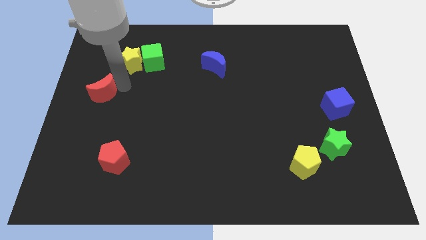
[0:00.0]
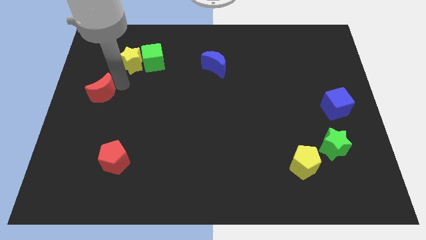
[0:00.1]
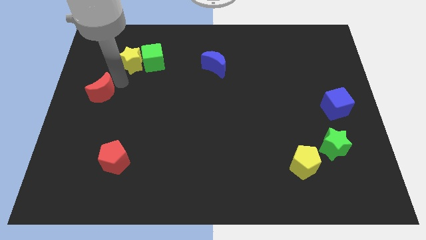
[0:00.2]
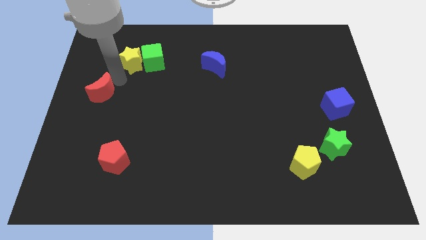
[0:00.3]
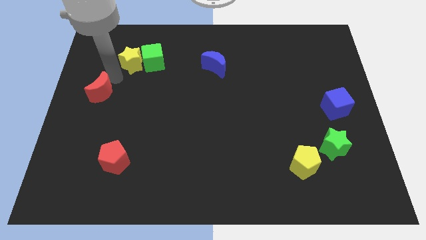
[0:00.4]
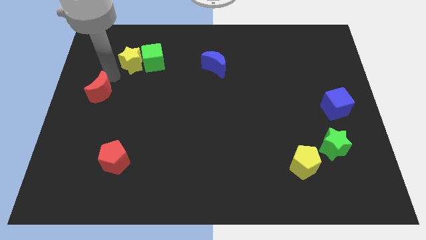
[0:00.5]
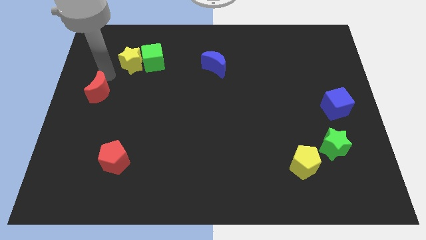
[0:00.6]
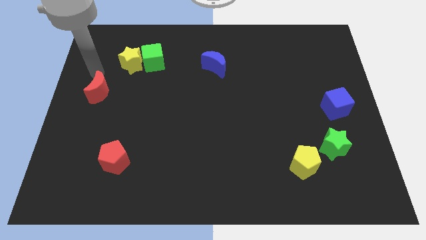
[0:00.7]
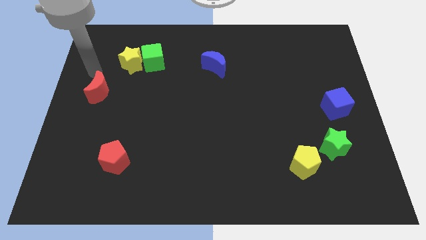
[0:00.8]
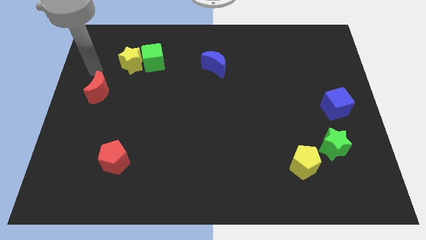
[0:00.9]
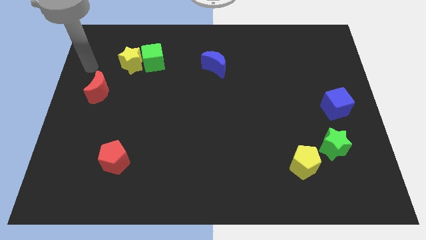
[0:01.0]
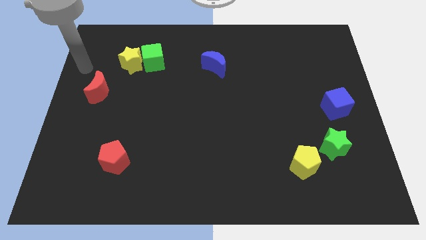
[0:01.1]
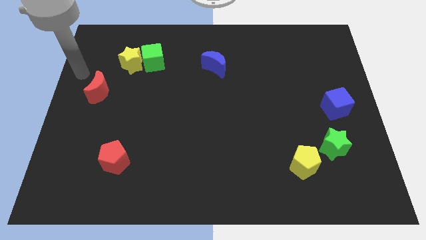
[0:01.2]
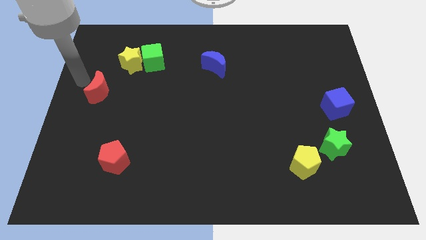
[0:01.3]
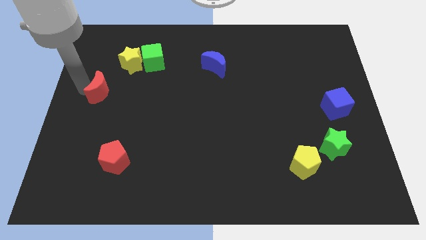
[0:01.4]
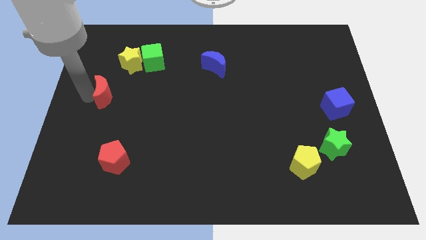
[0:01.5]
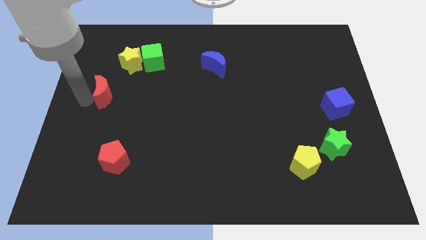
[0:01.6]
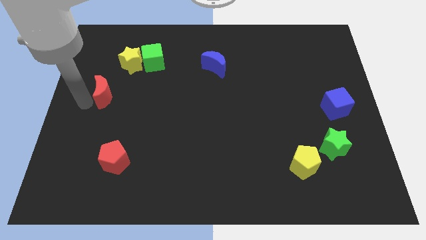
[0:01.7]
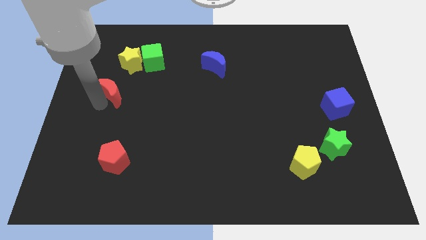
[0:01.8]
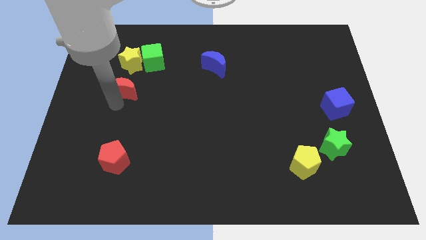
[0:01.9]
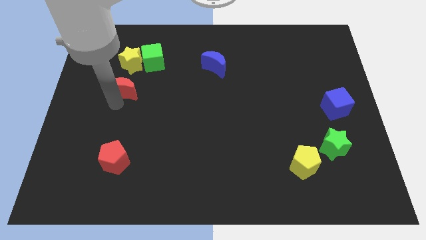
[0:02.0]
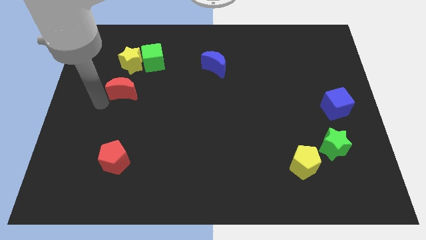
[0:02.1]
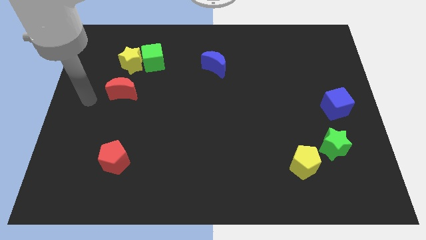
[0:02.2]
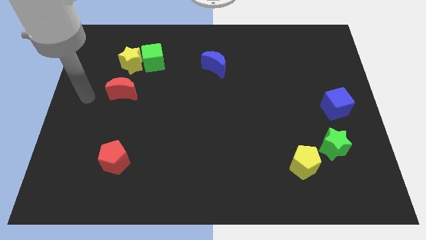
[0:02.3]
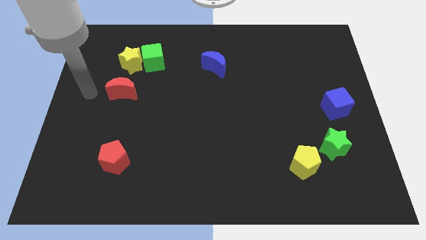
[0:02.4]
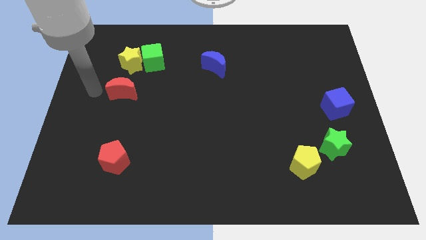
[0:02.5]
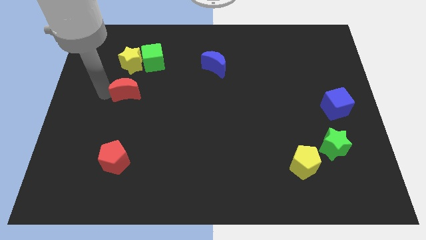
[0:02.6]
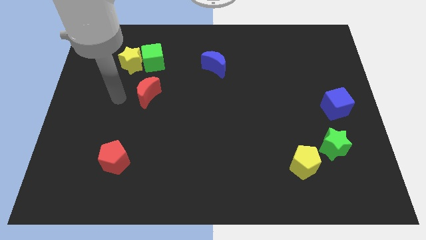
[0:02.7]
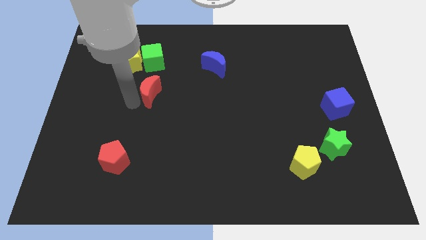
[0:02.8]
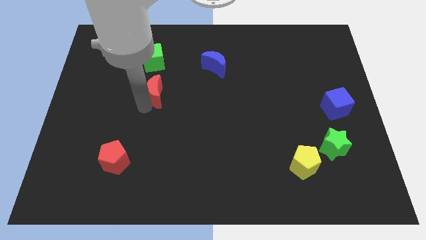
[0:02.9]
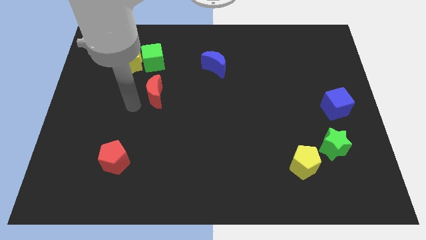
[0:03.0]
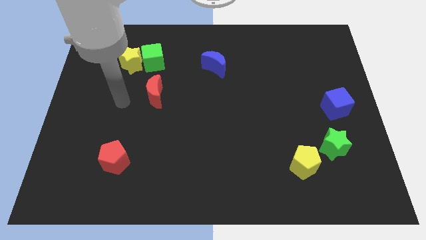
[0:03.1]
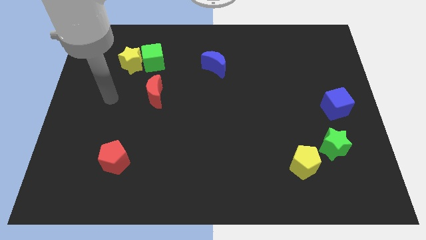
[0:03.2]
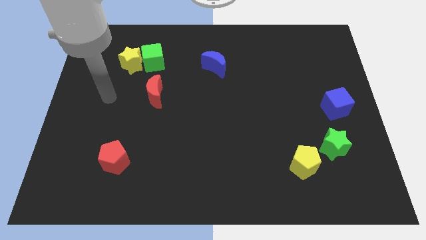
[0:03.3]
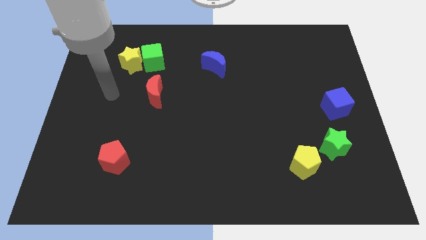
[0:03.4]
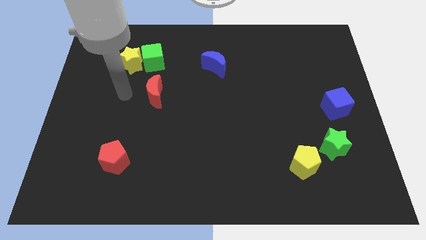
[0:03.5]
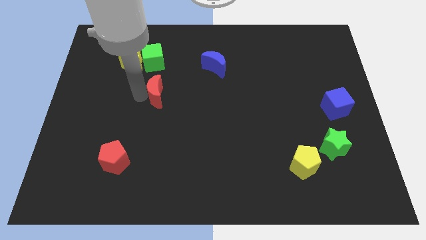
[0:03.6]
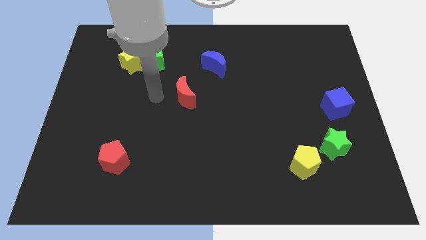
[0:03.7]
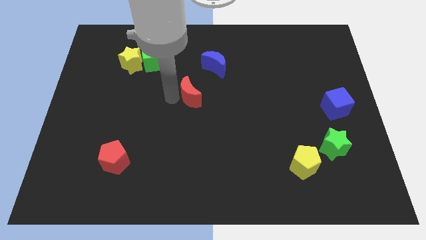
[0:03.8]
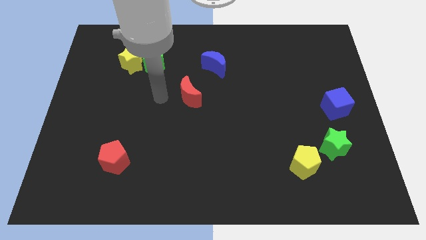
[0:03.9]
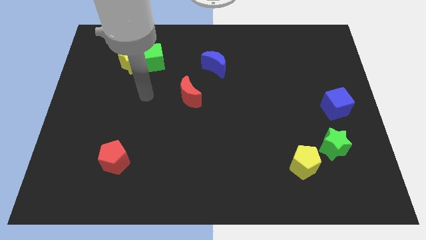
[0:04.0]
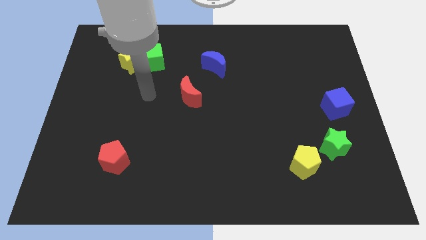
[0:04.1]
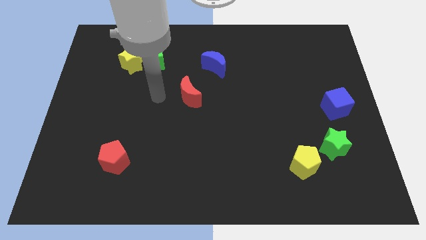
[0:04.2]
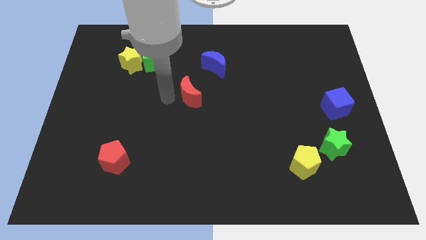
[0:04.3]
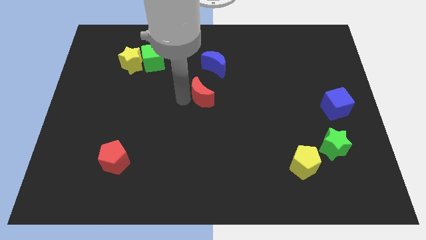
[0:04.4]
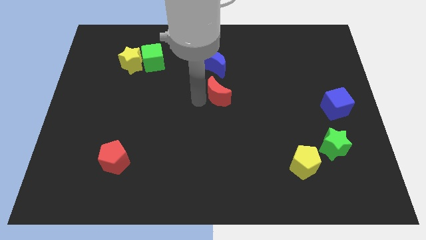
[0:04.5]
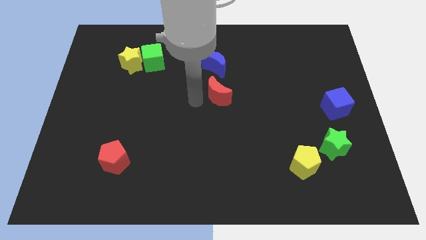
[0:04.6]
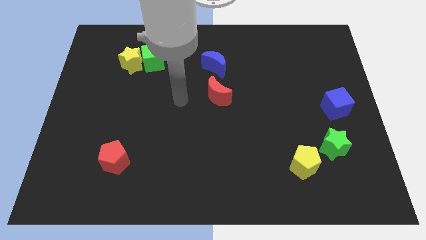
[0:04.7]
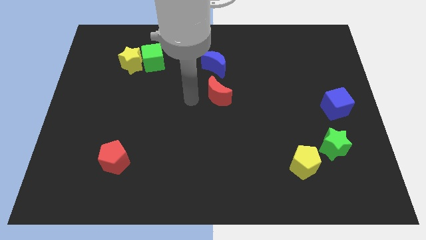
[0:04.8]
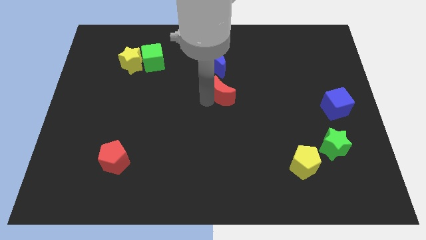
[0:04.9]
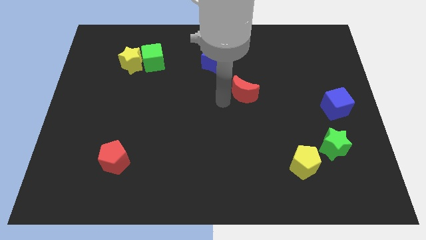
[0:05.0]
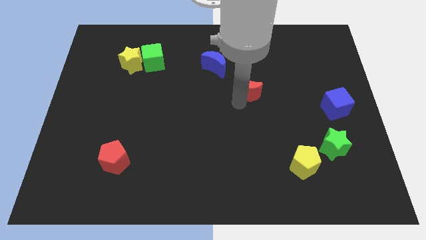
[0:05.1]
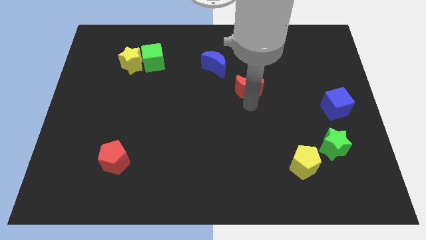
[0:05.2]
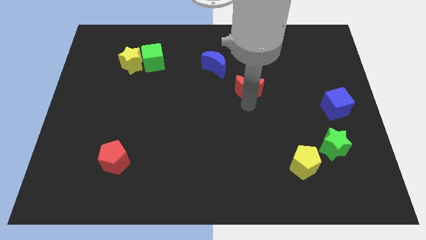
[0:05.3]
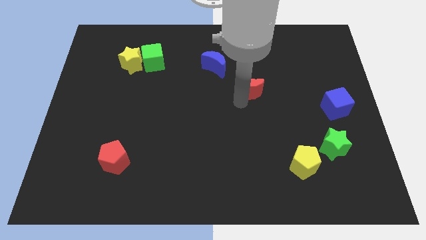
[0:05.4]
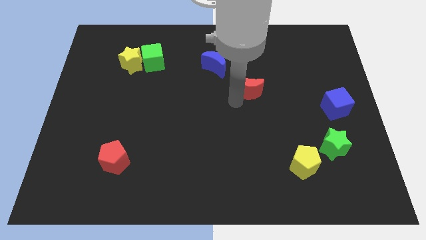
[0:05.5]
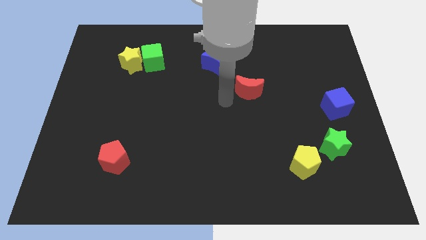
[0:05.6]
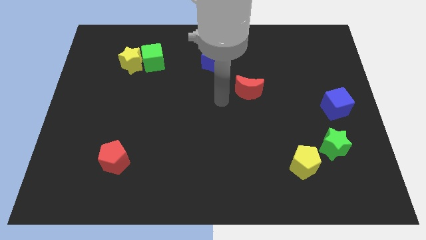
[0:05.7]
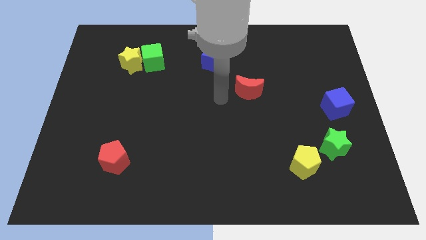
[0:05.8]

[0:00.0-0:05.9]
place the red crescent diagonally below the bottom right side of the blue crescent

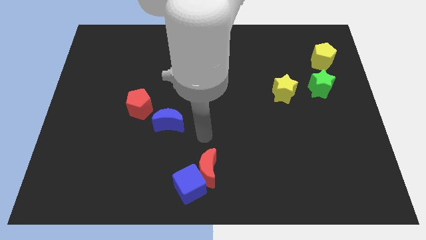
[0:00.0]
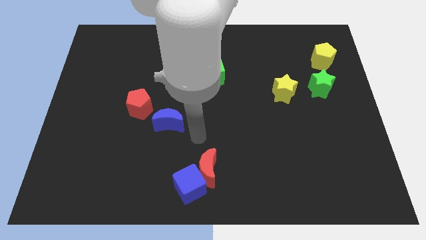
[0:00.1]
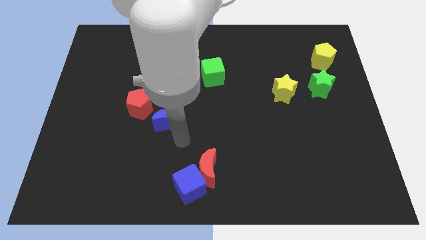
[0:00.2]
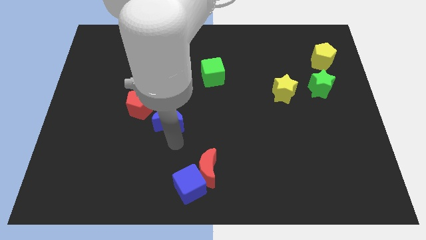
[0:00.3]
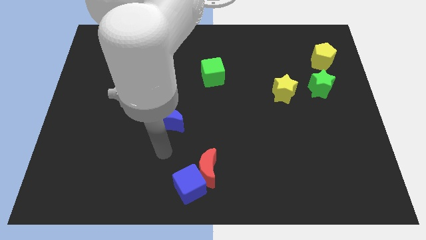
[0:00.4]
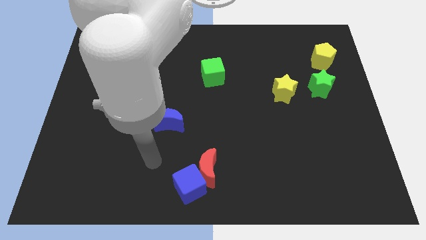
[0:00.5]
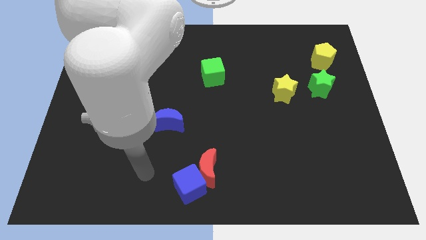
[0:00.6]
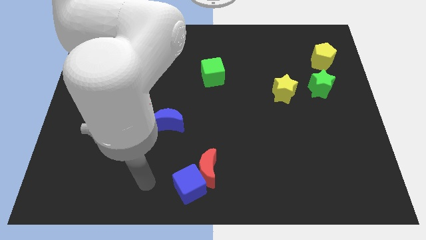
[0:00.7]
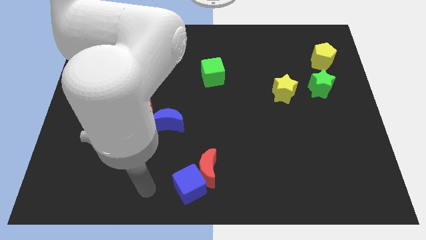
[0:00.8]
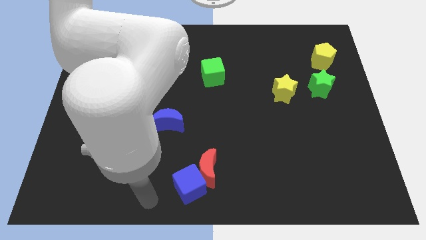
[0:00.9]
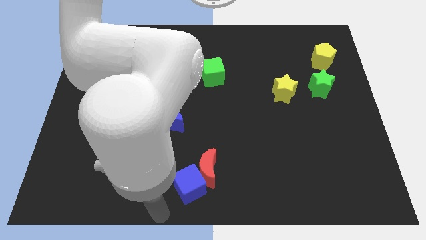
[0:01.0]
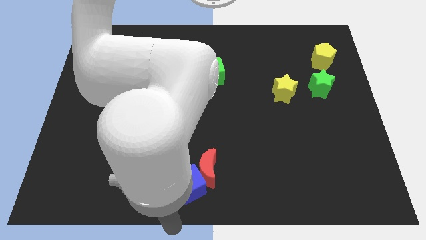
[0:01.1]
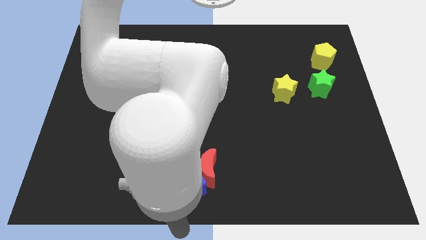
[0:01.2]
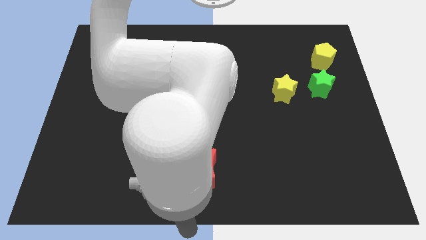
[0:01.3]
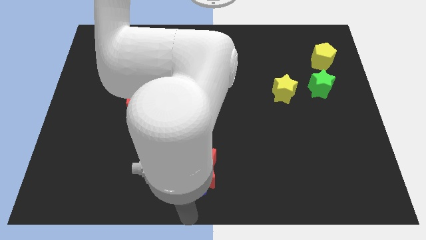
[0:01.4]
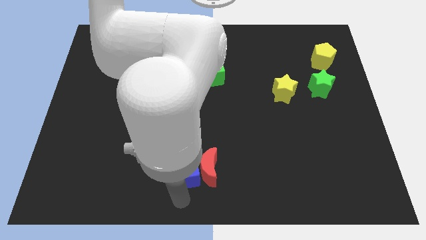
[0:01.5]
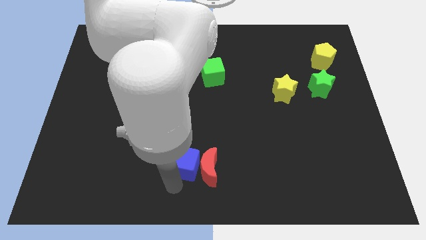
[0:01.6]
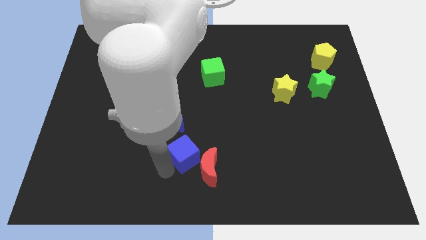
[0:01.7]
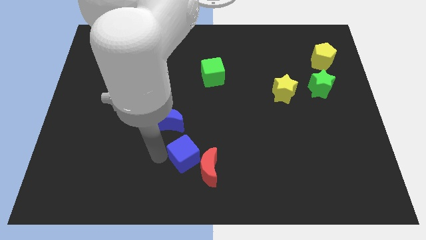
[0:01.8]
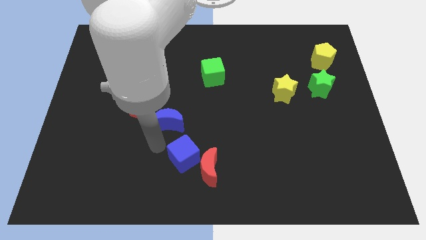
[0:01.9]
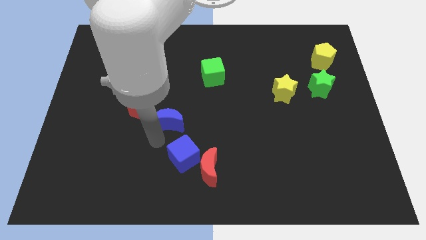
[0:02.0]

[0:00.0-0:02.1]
move the blue cube towards the blue moon

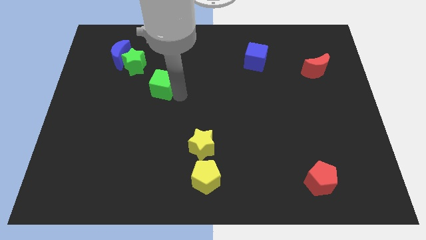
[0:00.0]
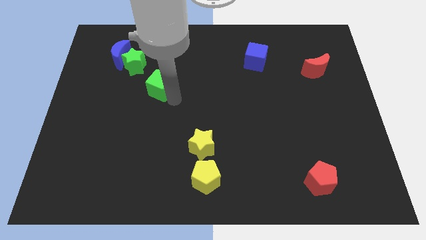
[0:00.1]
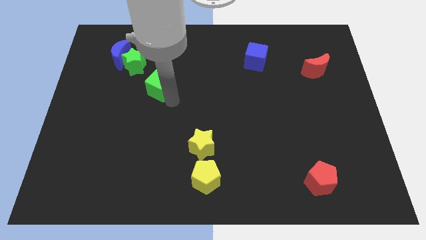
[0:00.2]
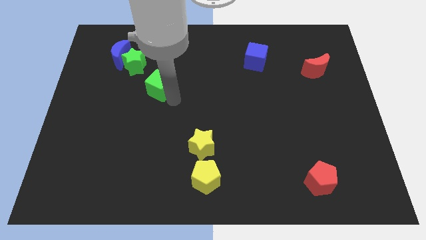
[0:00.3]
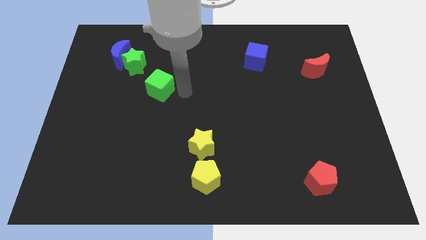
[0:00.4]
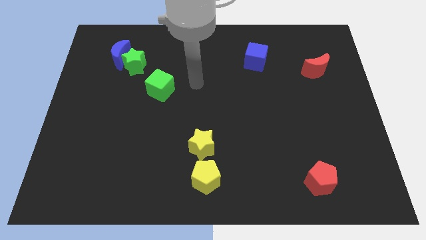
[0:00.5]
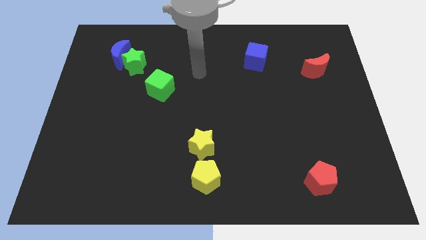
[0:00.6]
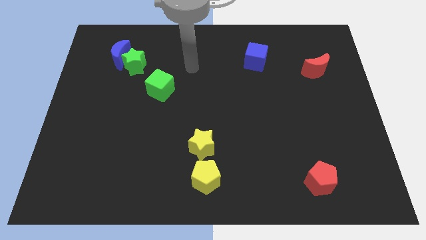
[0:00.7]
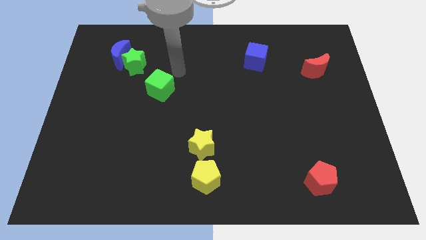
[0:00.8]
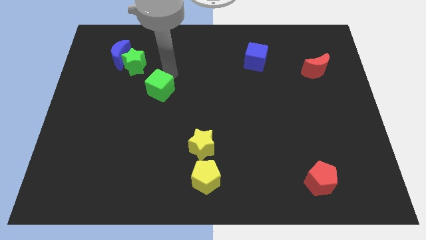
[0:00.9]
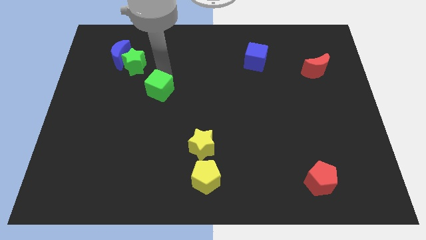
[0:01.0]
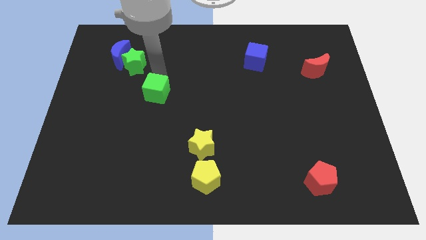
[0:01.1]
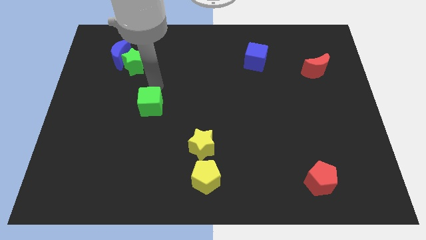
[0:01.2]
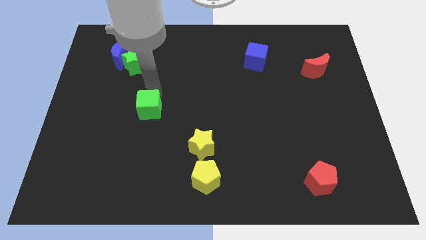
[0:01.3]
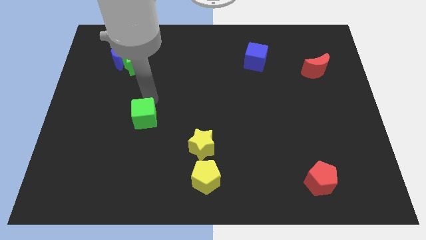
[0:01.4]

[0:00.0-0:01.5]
move the green cube slightly down
